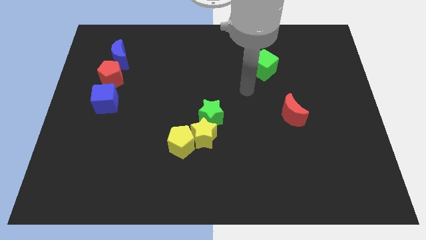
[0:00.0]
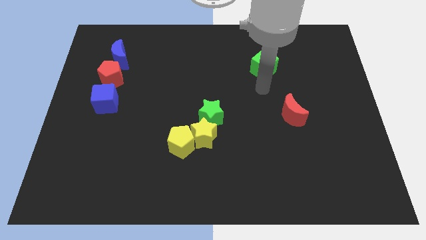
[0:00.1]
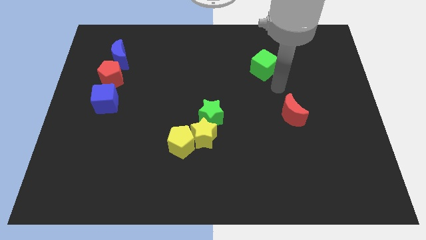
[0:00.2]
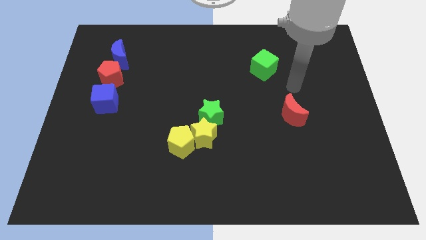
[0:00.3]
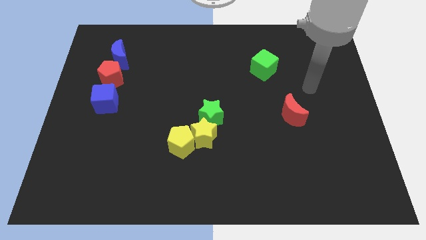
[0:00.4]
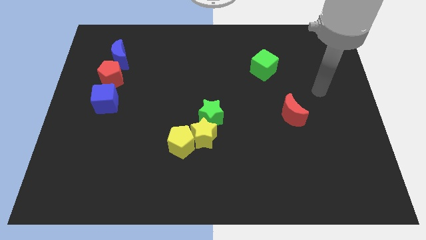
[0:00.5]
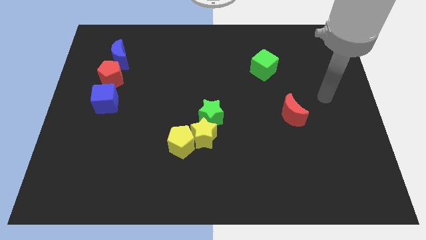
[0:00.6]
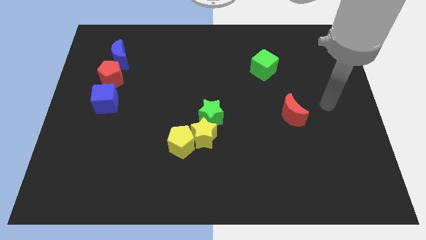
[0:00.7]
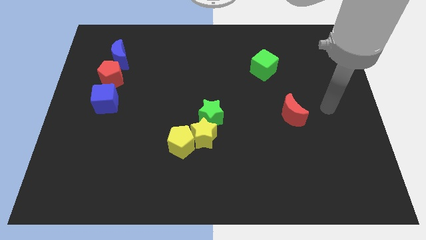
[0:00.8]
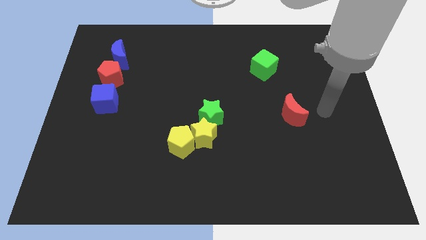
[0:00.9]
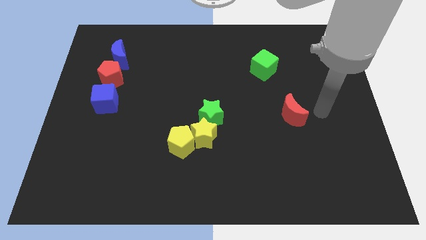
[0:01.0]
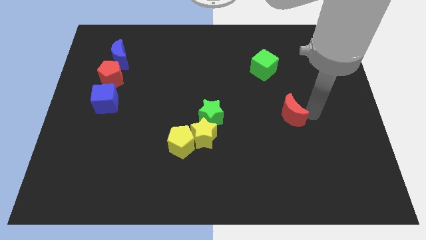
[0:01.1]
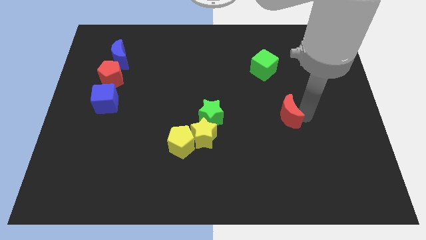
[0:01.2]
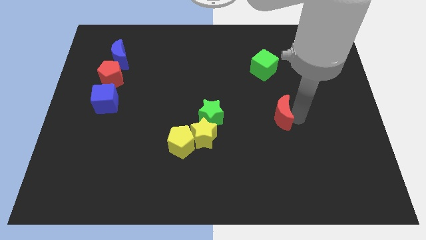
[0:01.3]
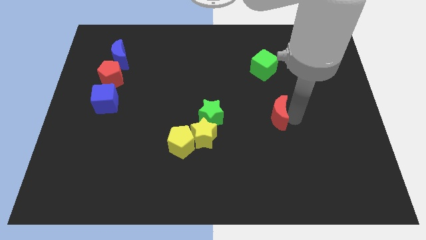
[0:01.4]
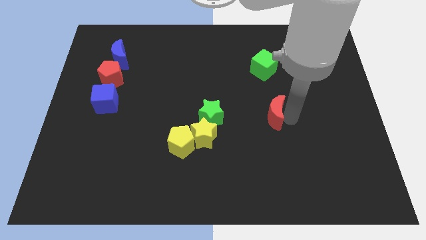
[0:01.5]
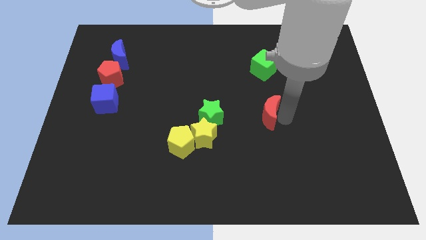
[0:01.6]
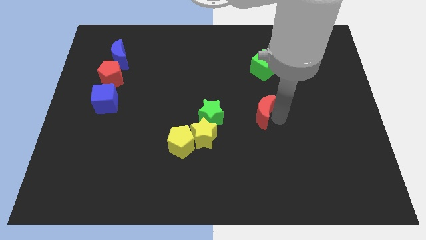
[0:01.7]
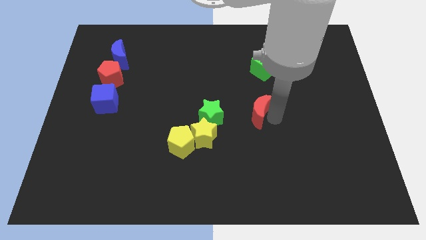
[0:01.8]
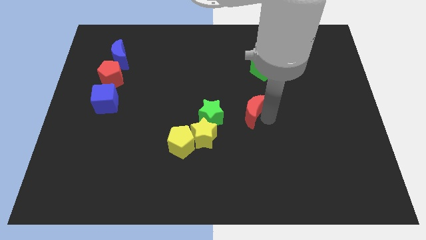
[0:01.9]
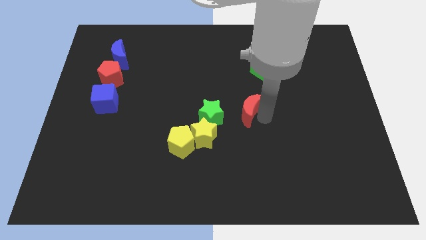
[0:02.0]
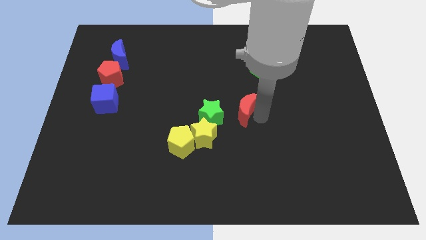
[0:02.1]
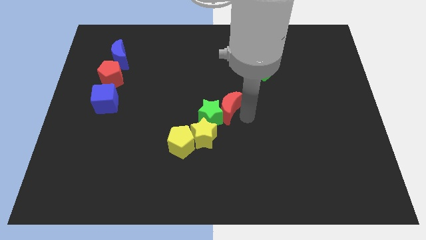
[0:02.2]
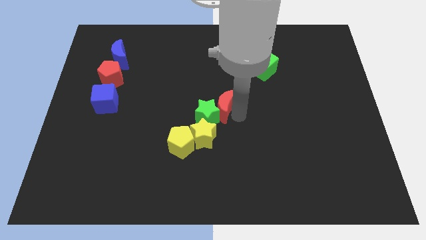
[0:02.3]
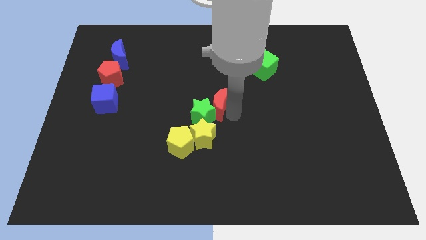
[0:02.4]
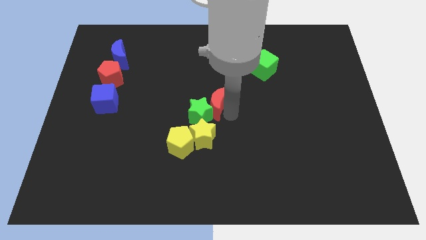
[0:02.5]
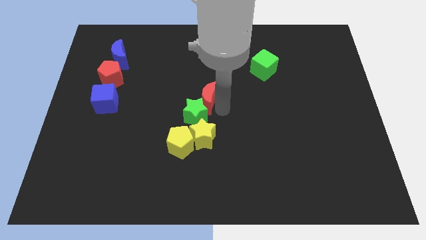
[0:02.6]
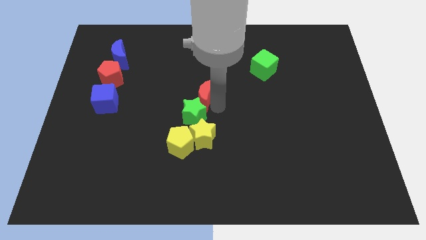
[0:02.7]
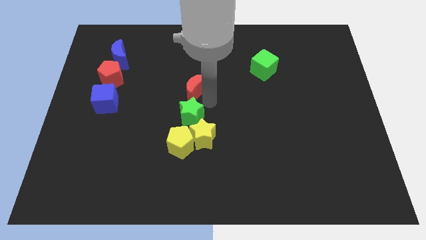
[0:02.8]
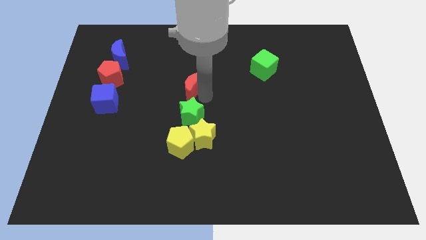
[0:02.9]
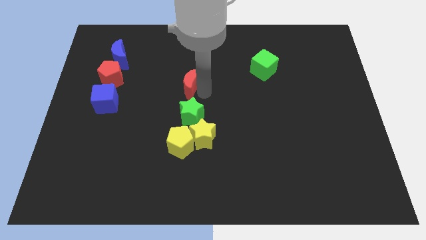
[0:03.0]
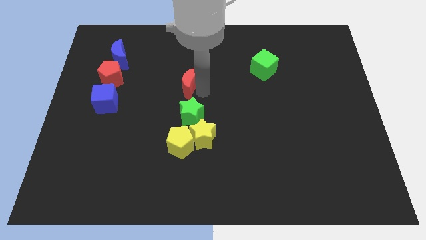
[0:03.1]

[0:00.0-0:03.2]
push red crescent above green star

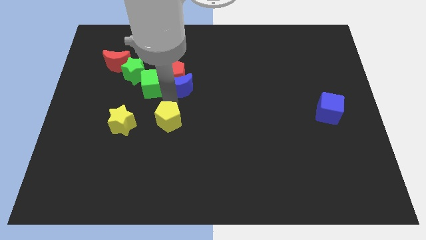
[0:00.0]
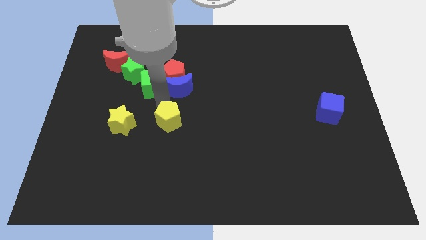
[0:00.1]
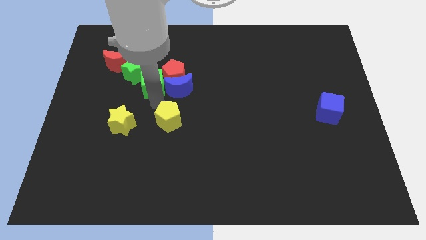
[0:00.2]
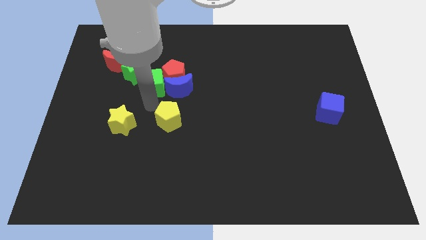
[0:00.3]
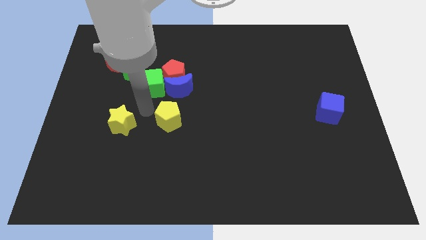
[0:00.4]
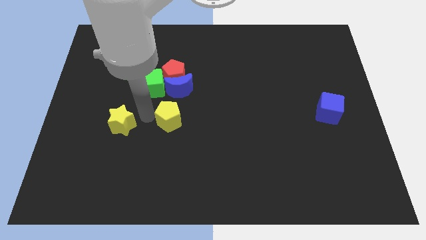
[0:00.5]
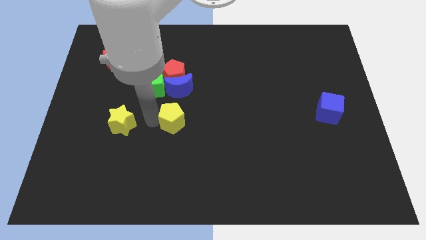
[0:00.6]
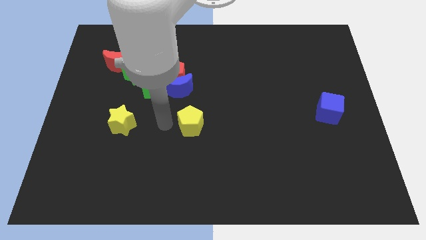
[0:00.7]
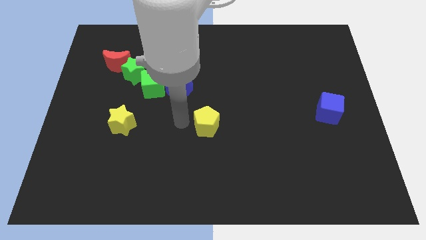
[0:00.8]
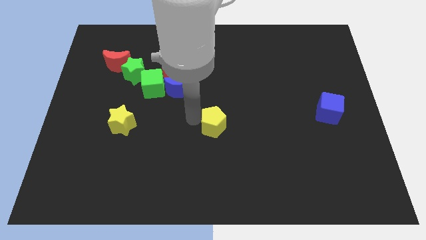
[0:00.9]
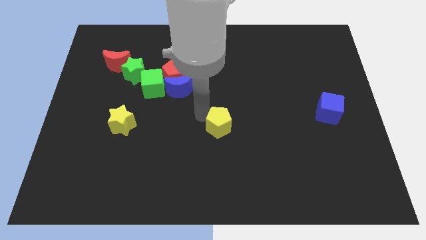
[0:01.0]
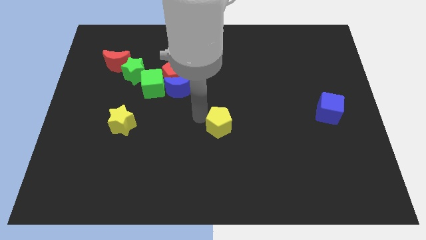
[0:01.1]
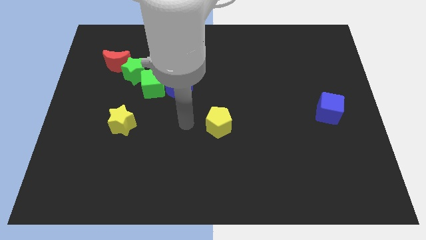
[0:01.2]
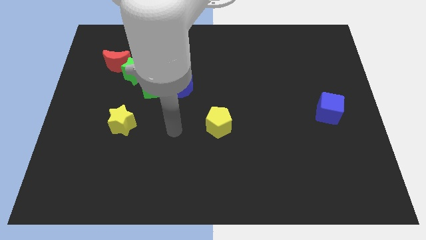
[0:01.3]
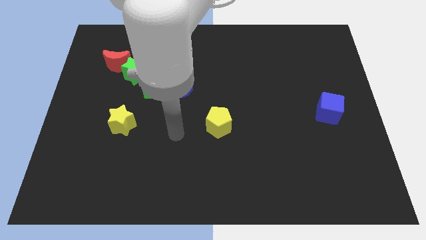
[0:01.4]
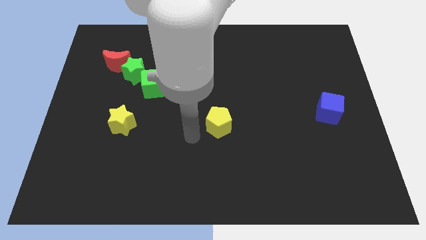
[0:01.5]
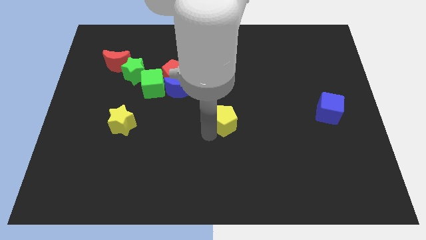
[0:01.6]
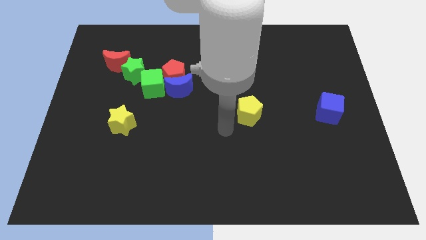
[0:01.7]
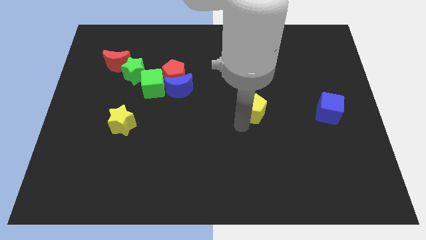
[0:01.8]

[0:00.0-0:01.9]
separate the yellow pentagon from the yellow star

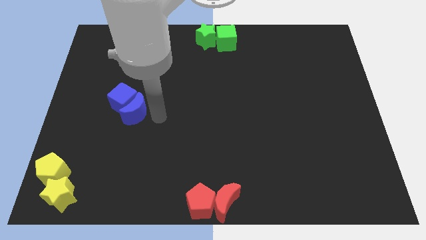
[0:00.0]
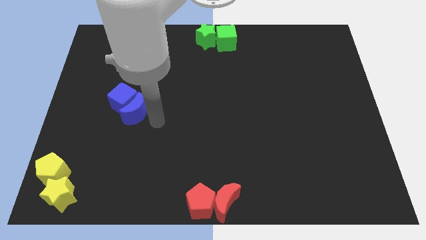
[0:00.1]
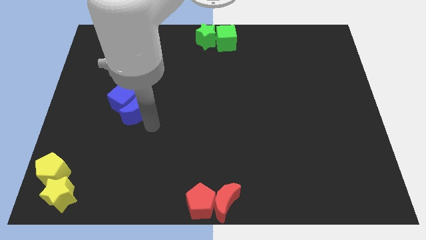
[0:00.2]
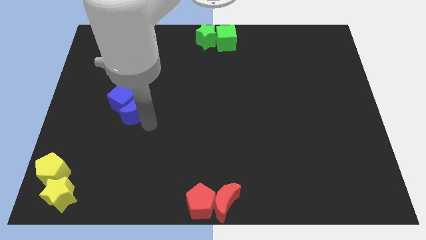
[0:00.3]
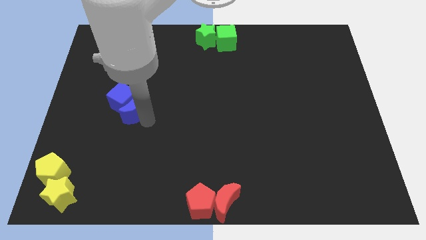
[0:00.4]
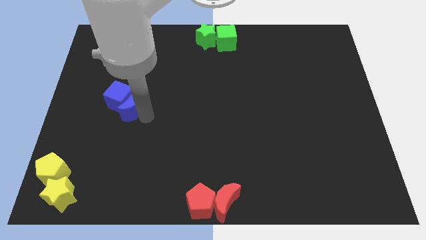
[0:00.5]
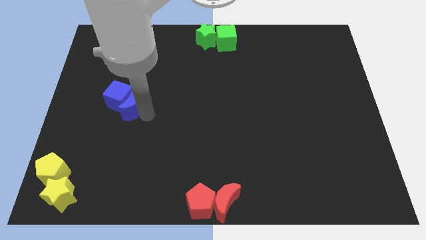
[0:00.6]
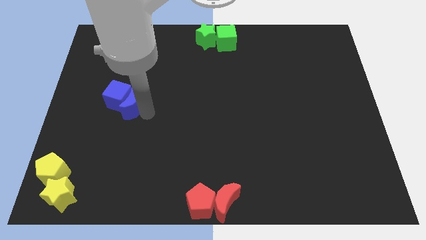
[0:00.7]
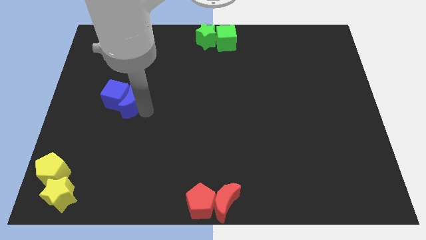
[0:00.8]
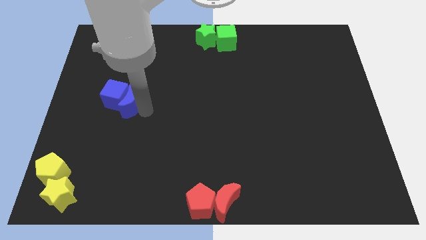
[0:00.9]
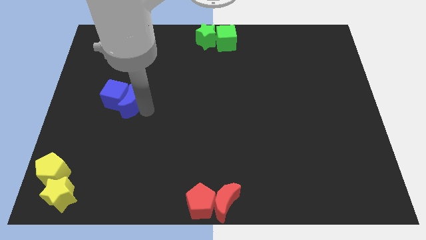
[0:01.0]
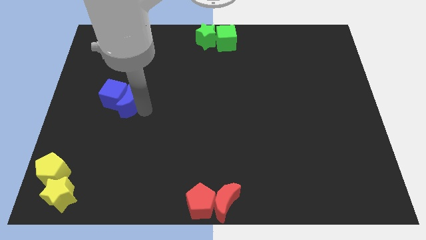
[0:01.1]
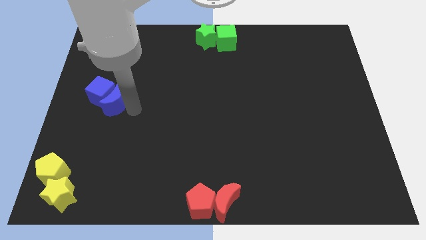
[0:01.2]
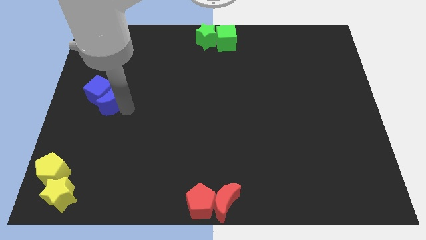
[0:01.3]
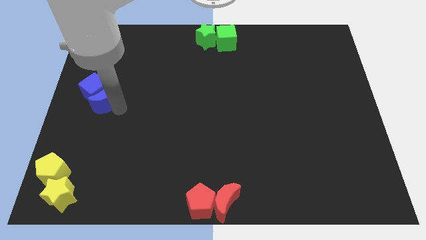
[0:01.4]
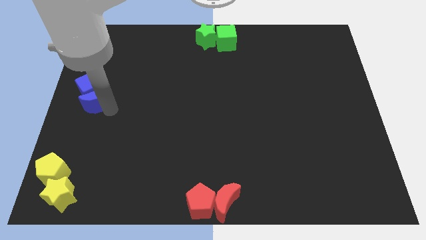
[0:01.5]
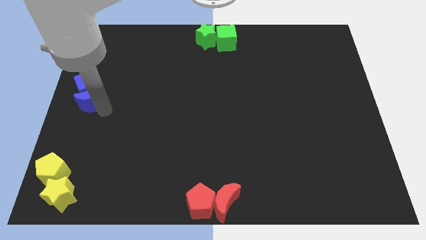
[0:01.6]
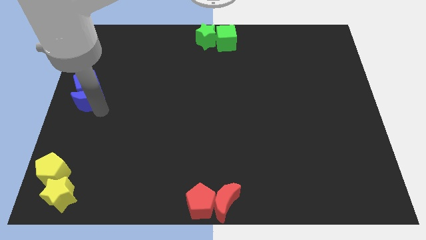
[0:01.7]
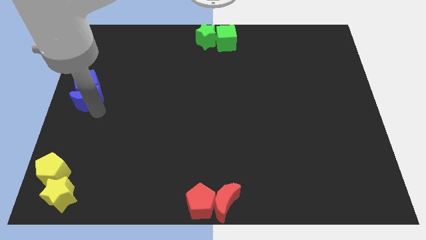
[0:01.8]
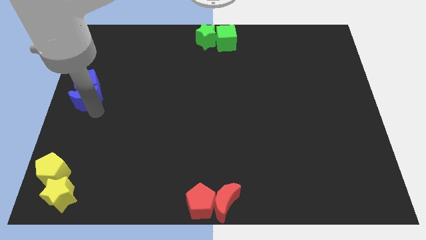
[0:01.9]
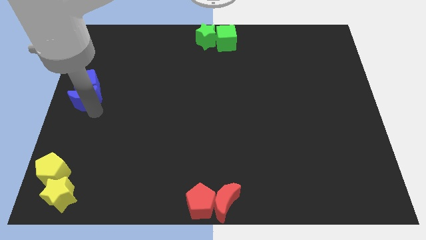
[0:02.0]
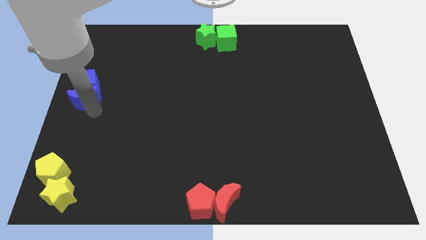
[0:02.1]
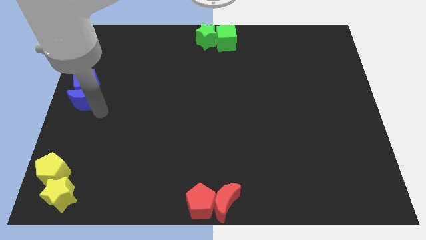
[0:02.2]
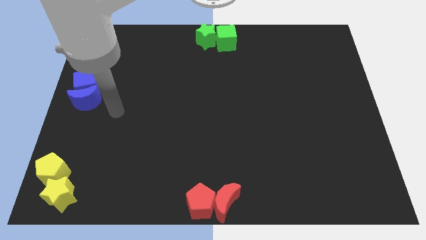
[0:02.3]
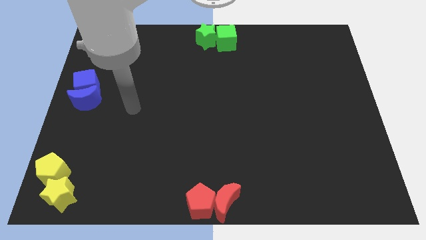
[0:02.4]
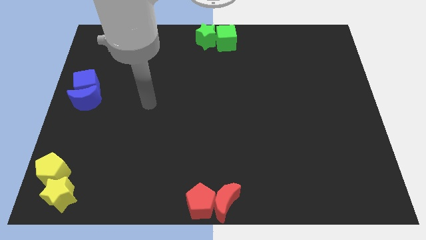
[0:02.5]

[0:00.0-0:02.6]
move the blue blocks to the center left of the board

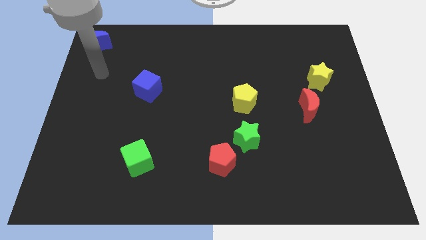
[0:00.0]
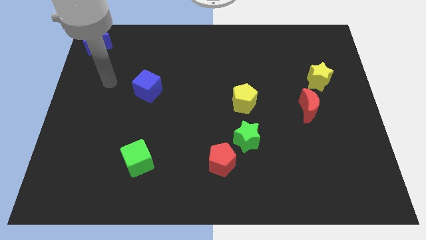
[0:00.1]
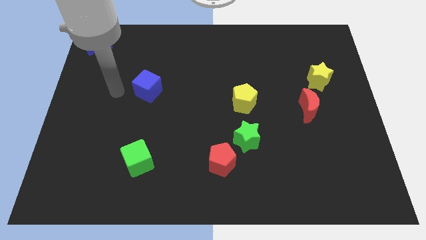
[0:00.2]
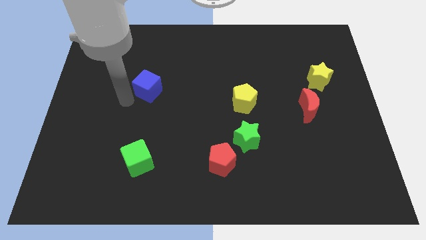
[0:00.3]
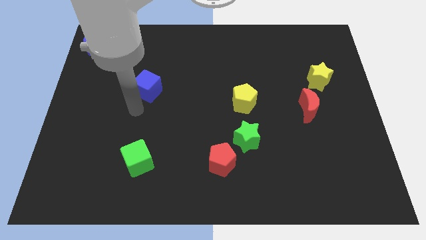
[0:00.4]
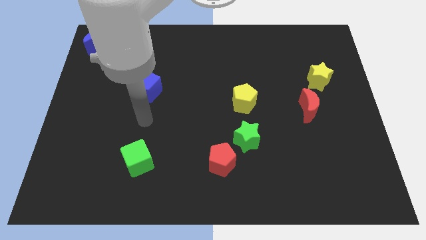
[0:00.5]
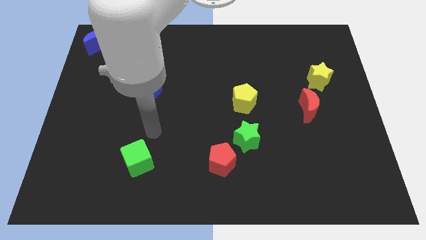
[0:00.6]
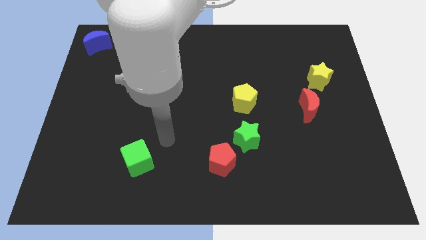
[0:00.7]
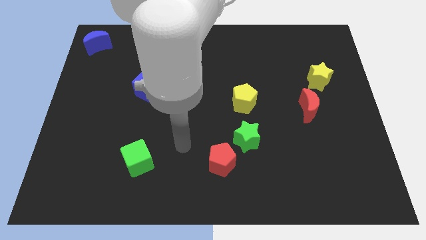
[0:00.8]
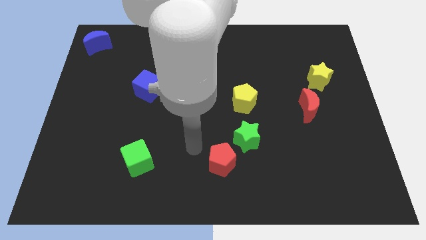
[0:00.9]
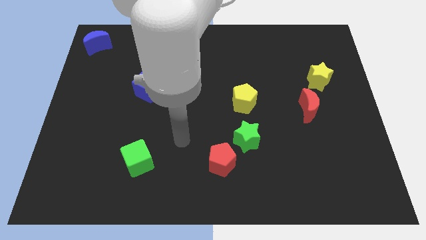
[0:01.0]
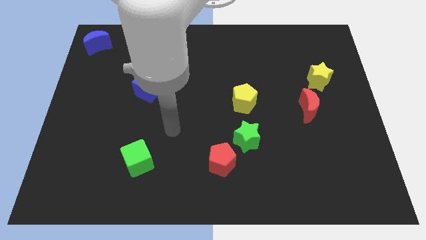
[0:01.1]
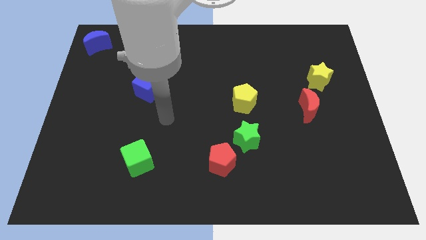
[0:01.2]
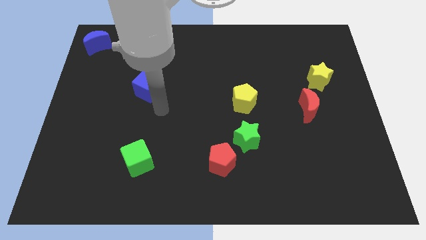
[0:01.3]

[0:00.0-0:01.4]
point your arm at the bottom of the blue cube
